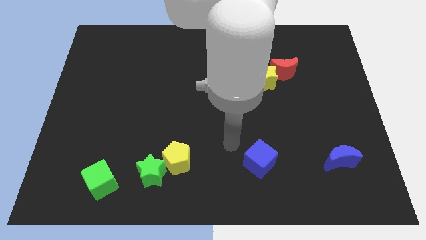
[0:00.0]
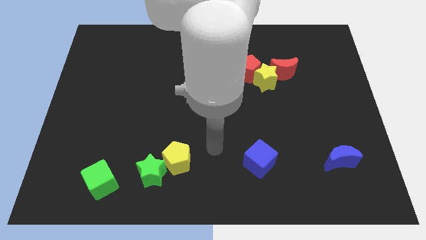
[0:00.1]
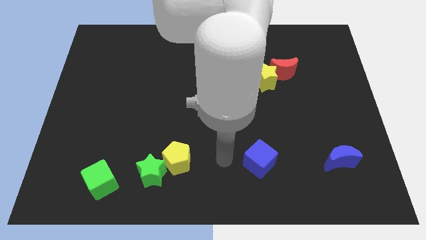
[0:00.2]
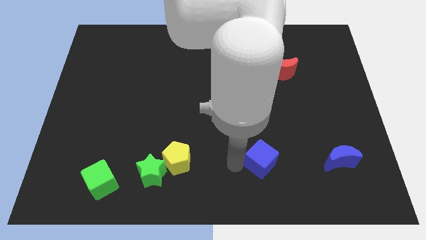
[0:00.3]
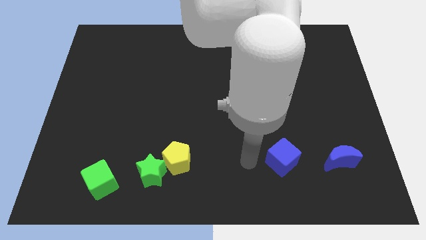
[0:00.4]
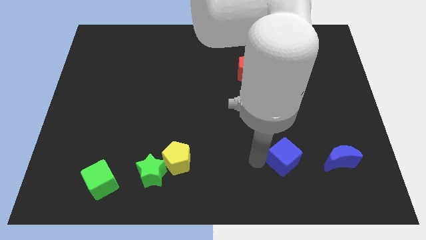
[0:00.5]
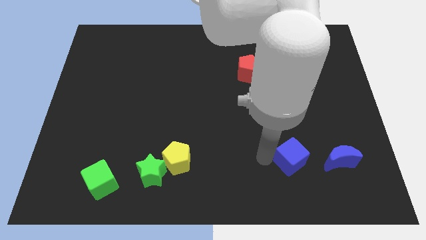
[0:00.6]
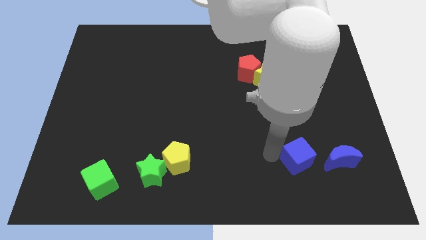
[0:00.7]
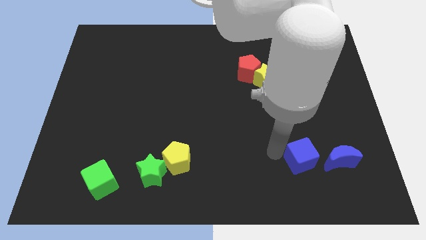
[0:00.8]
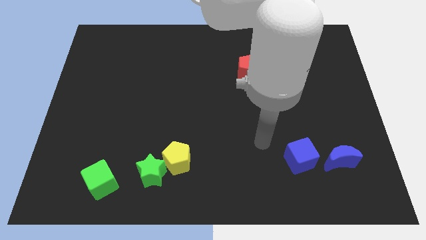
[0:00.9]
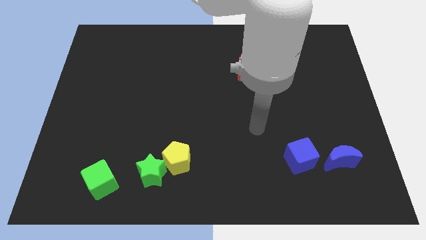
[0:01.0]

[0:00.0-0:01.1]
move the blue cube towards the blue crescent

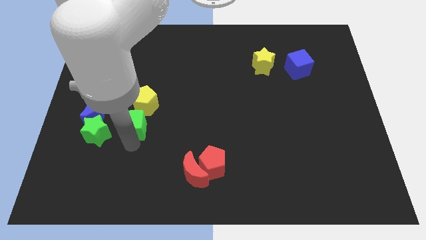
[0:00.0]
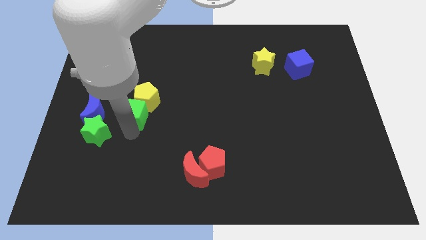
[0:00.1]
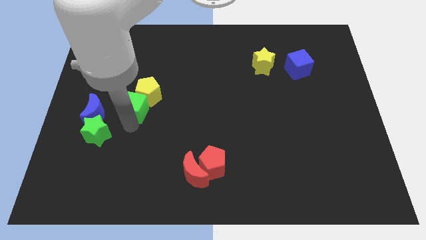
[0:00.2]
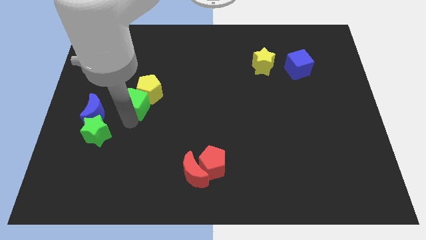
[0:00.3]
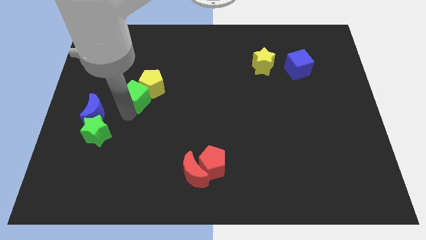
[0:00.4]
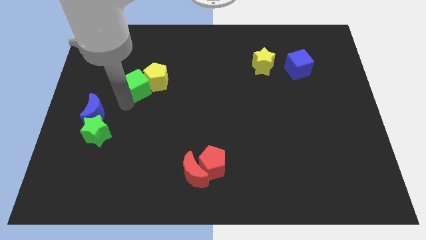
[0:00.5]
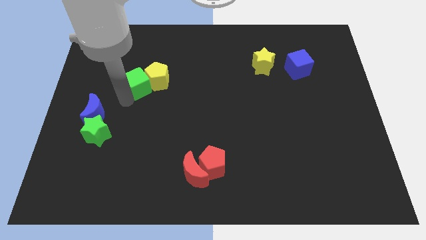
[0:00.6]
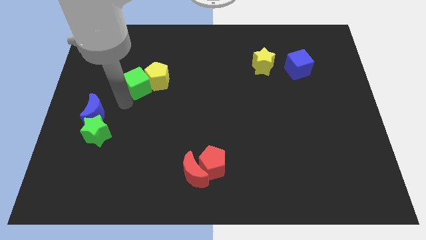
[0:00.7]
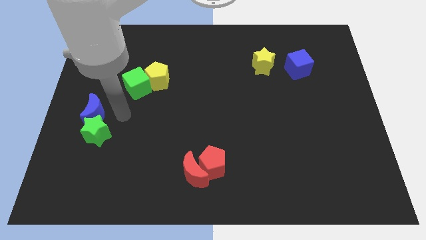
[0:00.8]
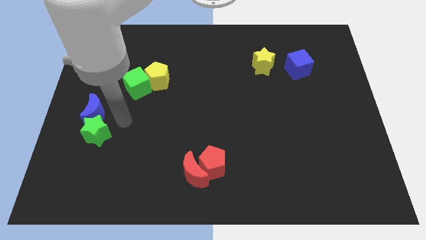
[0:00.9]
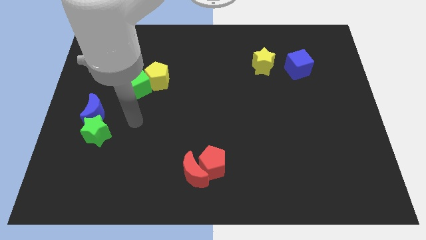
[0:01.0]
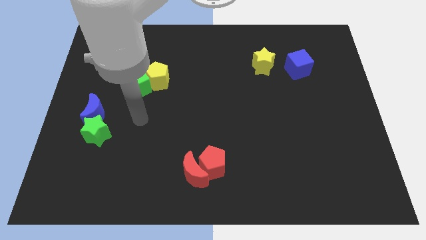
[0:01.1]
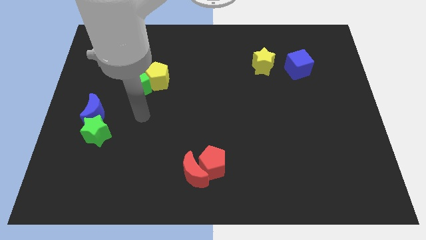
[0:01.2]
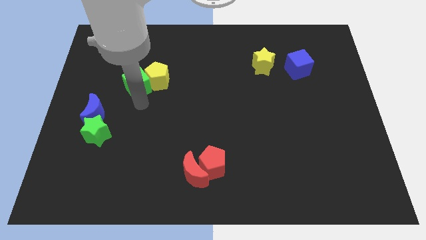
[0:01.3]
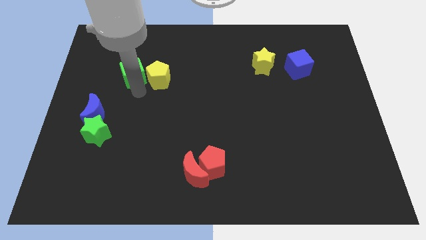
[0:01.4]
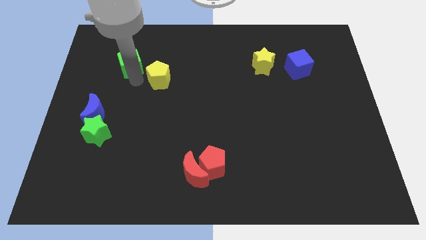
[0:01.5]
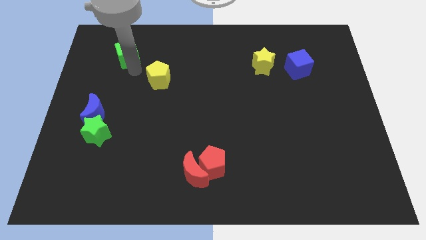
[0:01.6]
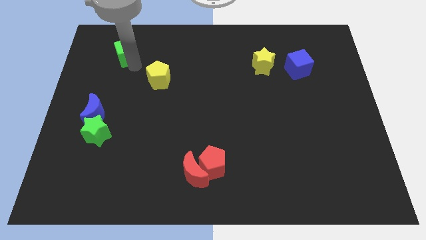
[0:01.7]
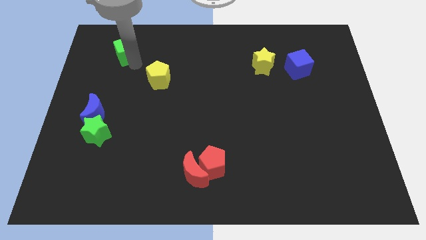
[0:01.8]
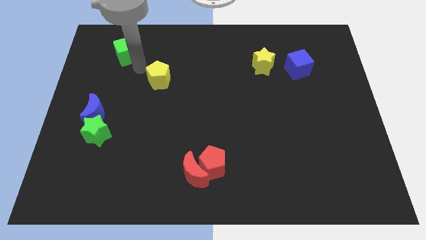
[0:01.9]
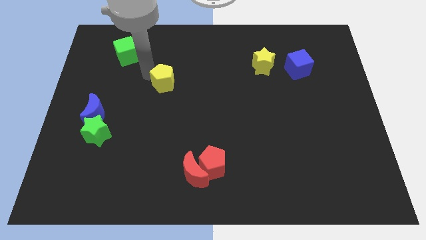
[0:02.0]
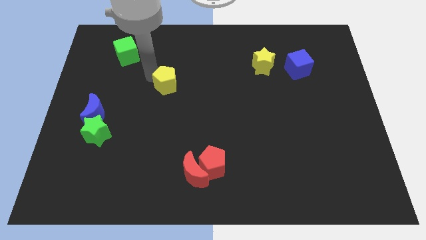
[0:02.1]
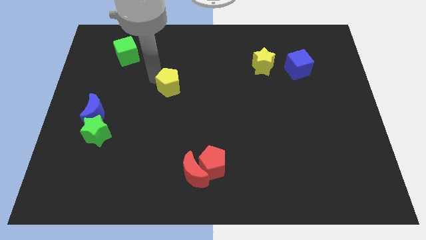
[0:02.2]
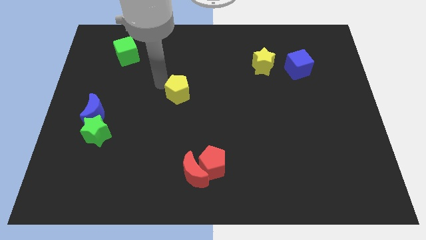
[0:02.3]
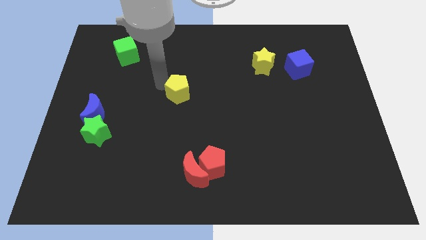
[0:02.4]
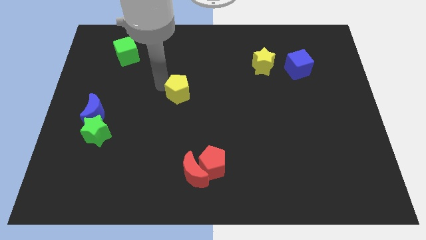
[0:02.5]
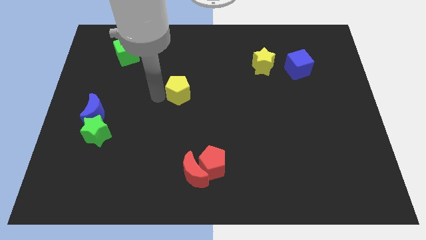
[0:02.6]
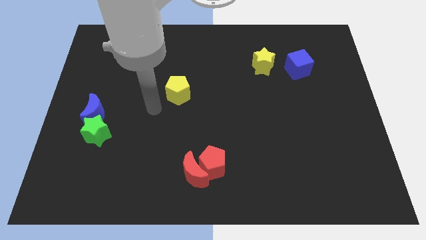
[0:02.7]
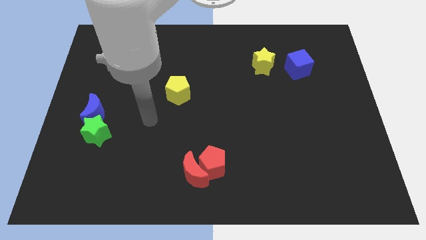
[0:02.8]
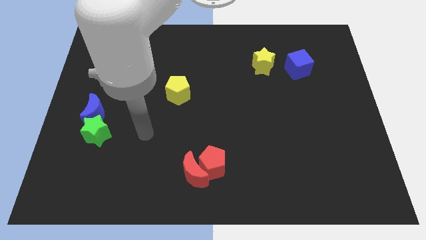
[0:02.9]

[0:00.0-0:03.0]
place the yellow pentagon above the red pentagon

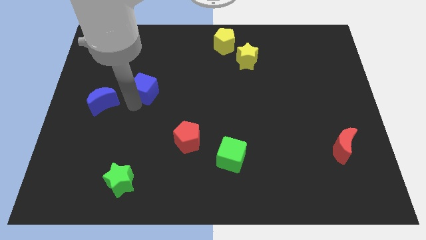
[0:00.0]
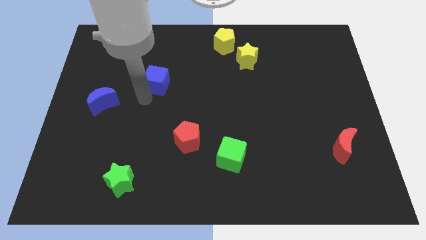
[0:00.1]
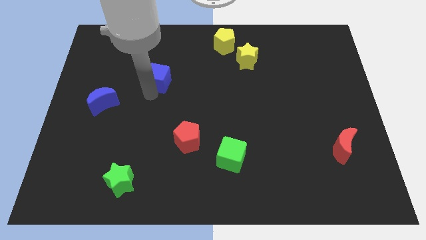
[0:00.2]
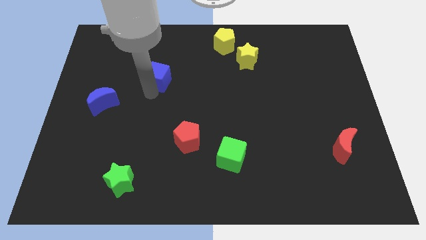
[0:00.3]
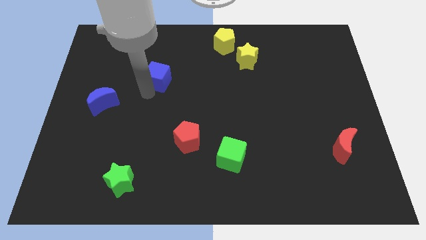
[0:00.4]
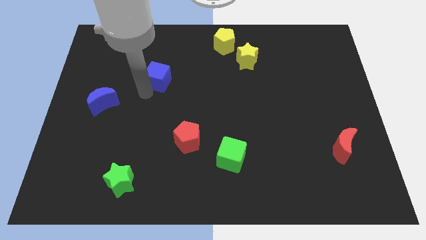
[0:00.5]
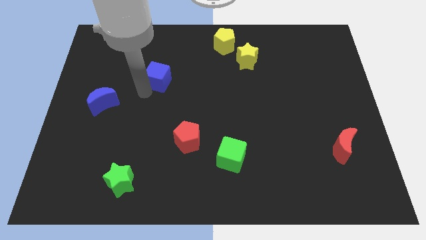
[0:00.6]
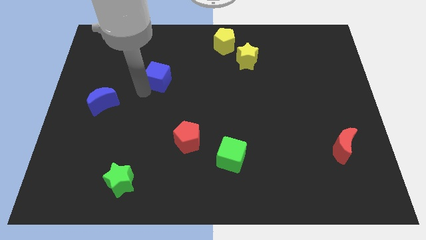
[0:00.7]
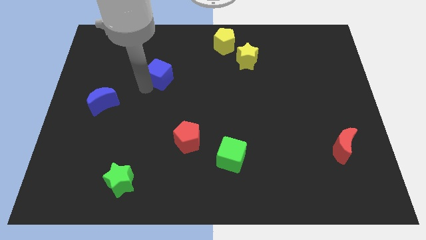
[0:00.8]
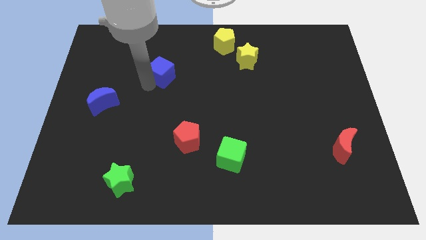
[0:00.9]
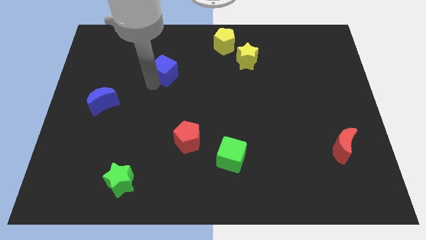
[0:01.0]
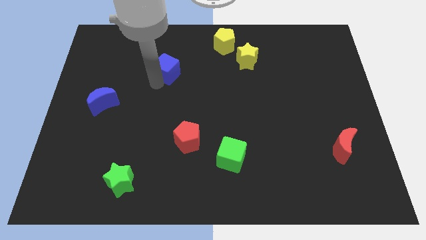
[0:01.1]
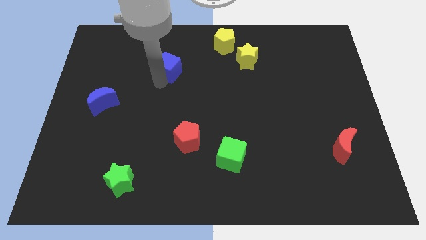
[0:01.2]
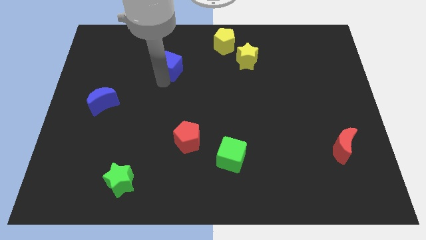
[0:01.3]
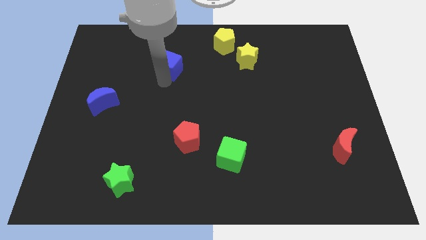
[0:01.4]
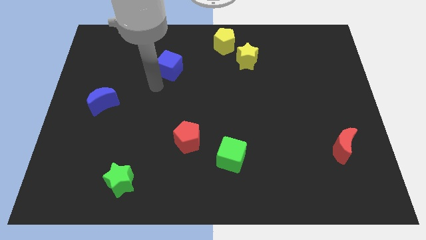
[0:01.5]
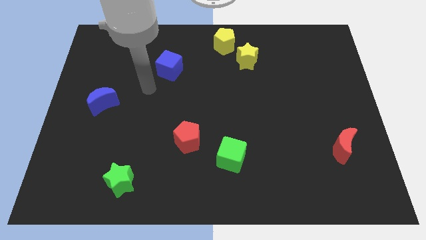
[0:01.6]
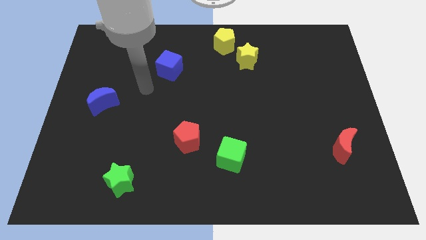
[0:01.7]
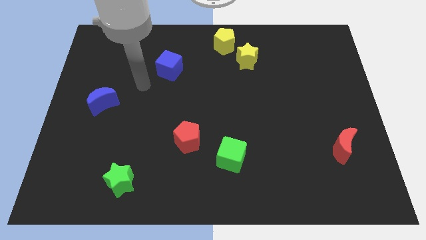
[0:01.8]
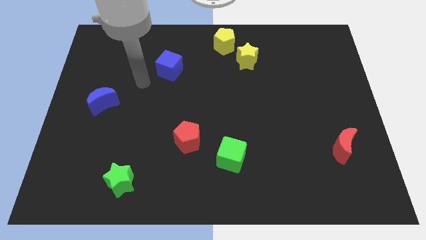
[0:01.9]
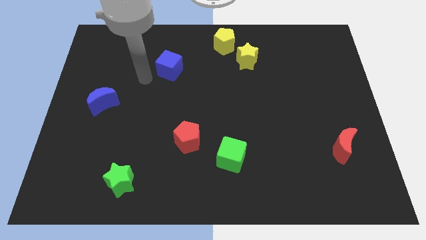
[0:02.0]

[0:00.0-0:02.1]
place the blue cube vertically above the red pentagon

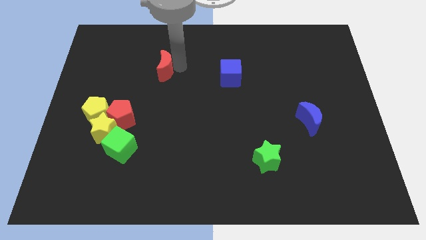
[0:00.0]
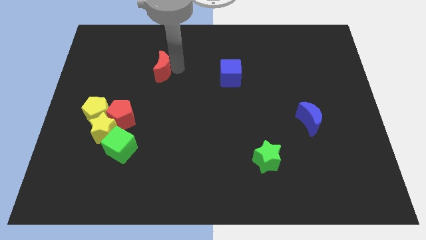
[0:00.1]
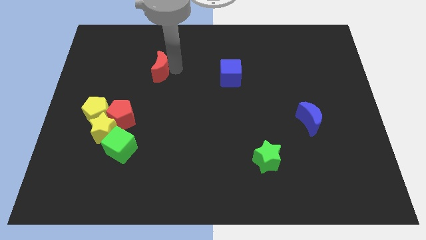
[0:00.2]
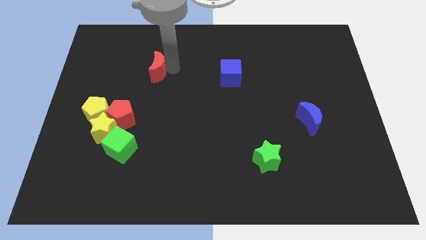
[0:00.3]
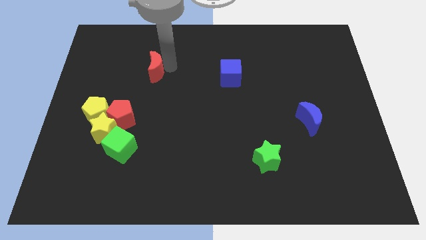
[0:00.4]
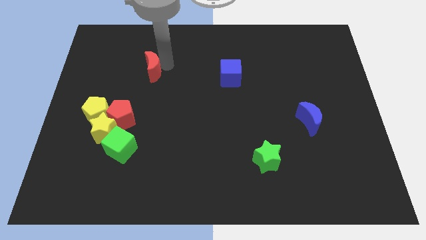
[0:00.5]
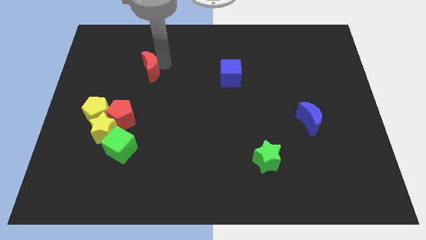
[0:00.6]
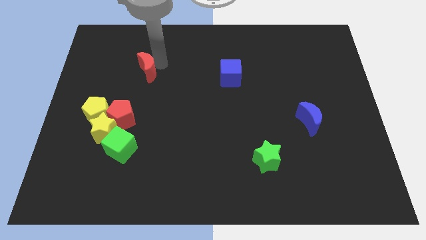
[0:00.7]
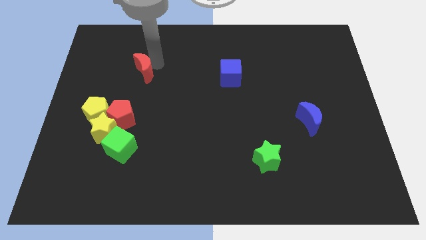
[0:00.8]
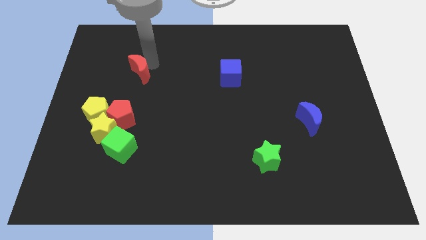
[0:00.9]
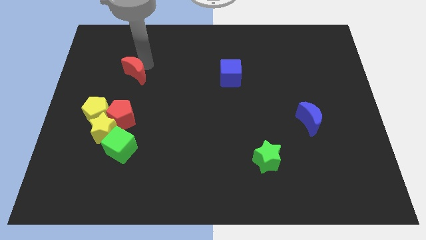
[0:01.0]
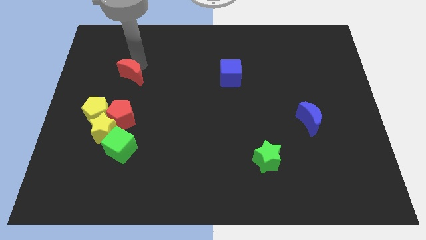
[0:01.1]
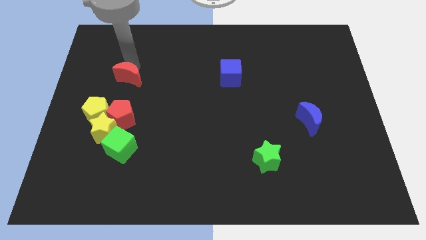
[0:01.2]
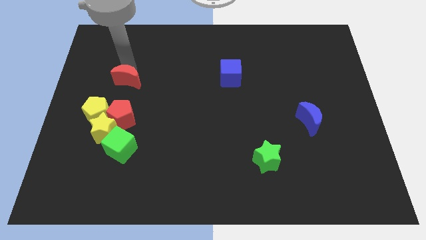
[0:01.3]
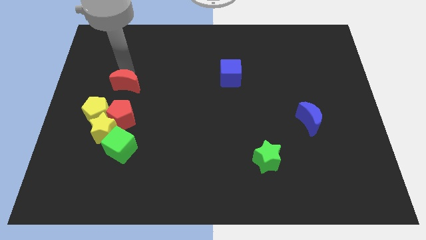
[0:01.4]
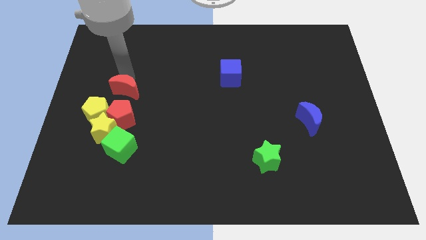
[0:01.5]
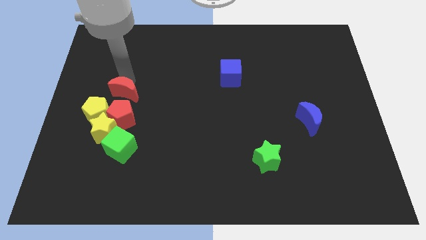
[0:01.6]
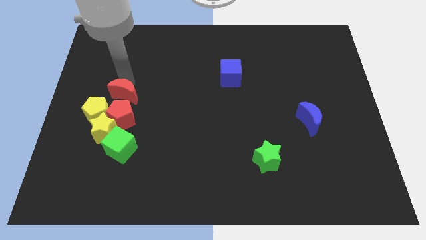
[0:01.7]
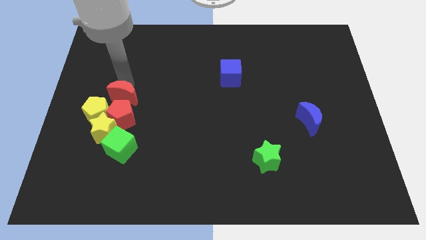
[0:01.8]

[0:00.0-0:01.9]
push the red crescent towards the red pentagon

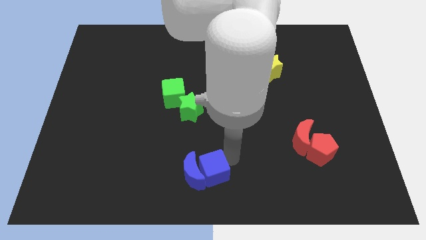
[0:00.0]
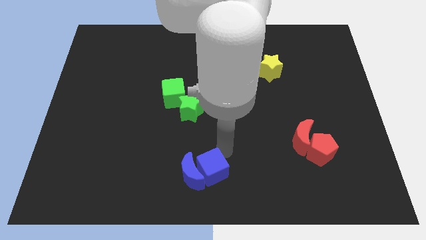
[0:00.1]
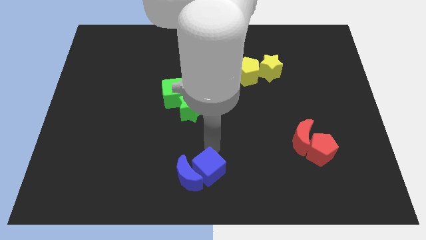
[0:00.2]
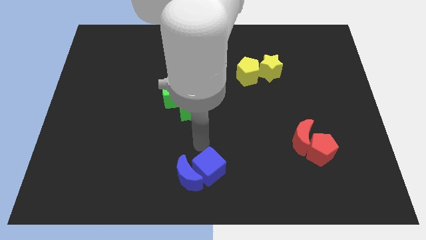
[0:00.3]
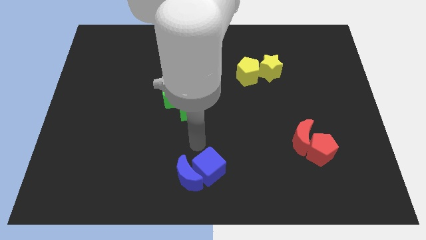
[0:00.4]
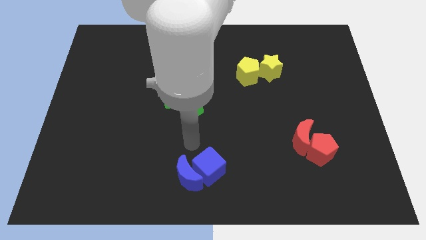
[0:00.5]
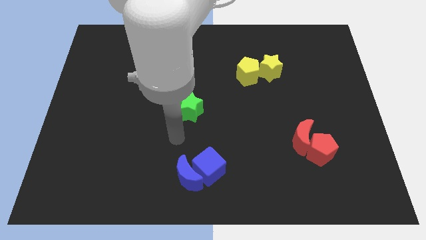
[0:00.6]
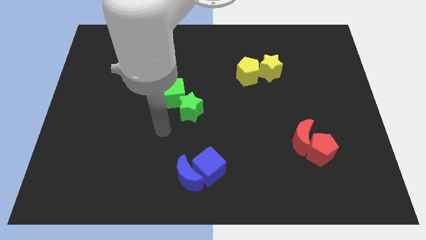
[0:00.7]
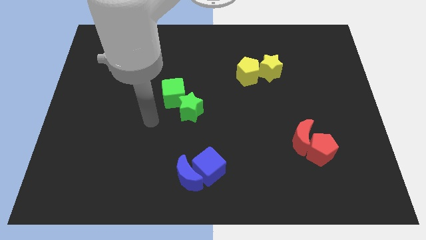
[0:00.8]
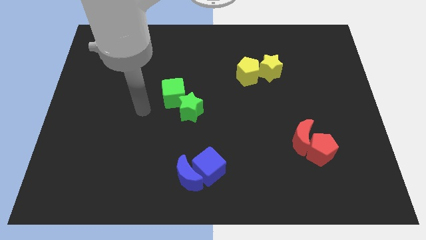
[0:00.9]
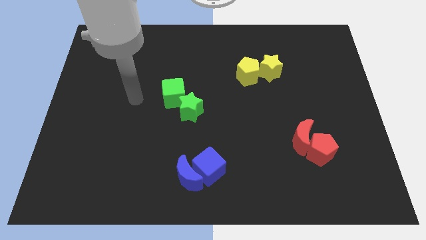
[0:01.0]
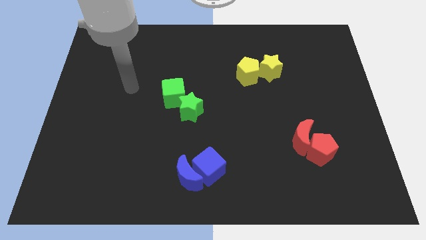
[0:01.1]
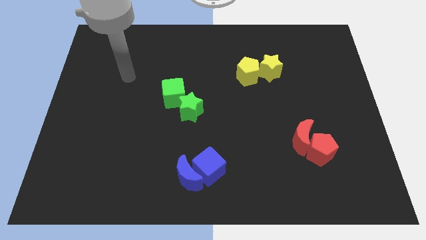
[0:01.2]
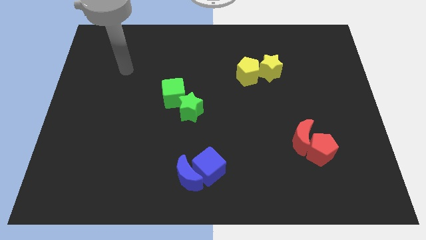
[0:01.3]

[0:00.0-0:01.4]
point your arm at the top left side of the green cube
